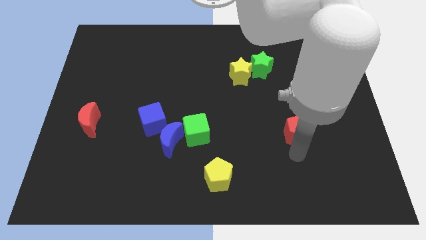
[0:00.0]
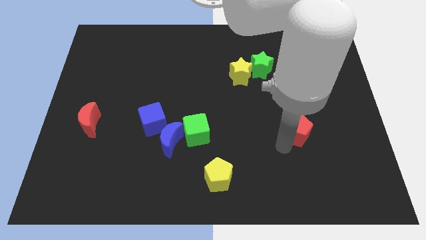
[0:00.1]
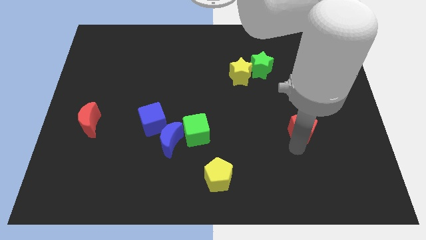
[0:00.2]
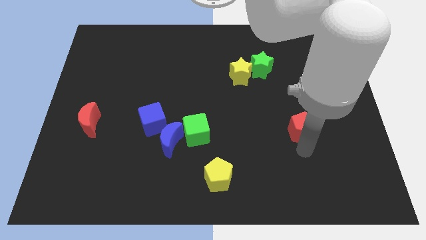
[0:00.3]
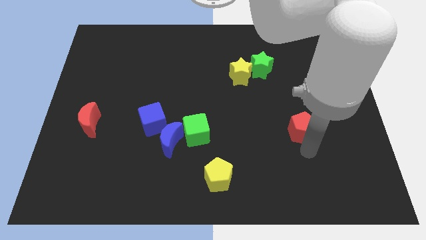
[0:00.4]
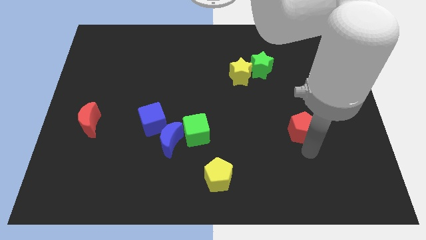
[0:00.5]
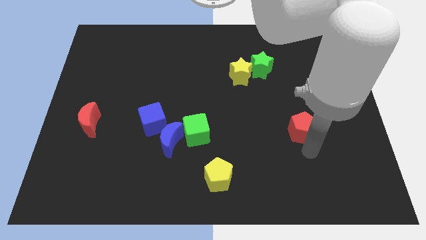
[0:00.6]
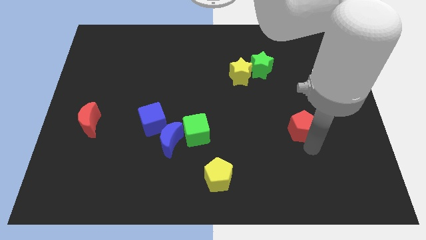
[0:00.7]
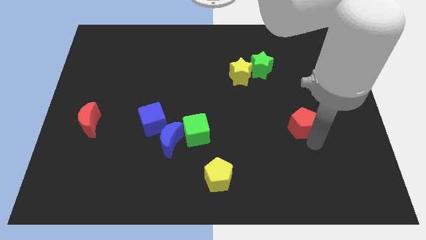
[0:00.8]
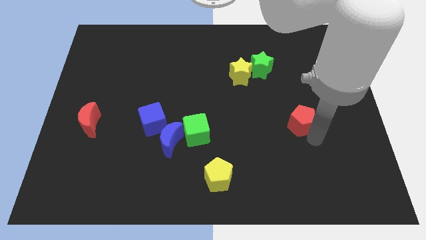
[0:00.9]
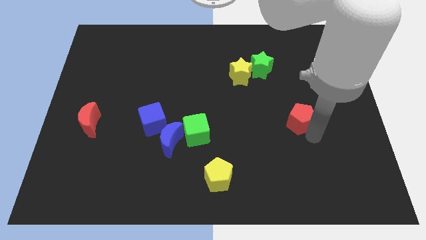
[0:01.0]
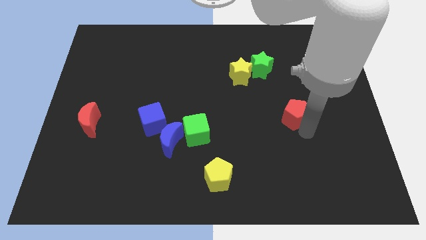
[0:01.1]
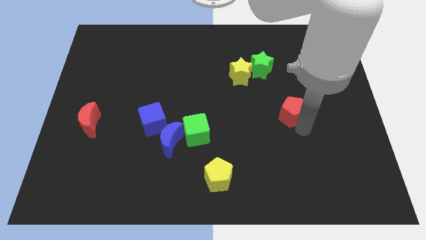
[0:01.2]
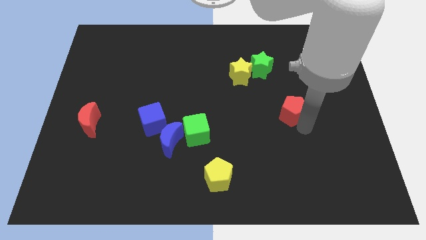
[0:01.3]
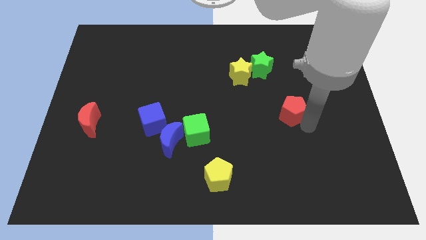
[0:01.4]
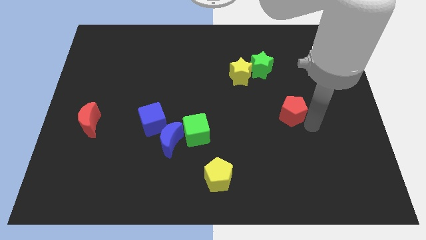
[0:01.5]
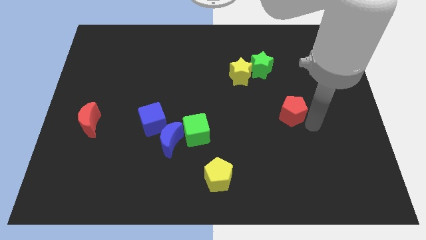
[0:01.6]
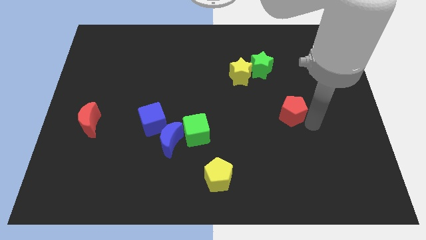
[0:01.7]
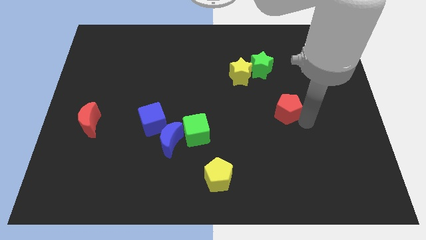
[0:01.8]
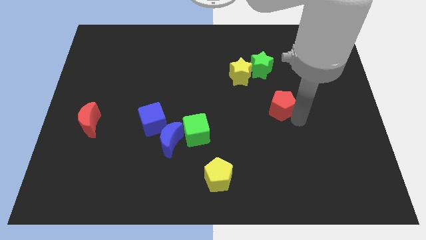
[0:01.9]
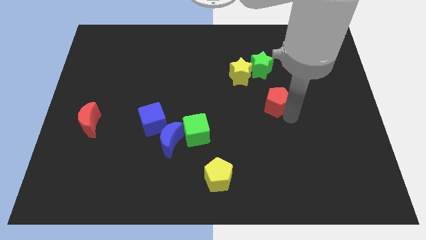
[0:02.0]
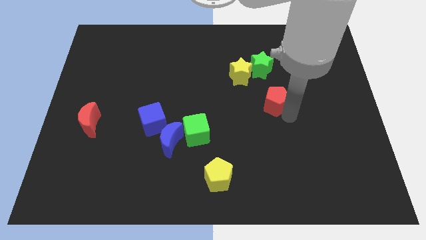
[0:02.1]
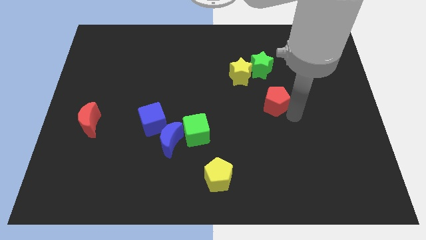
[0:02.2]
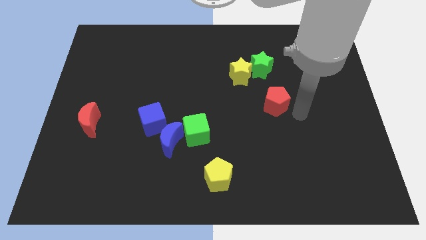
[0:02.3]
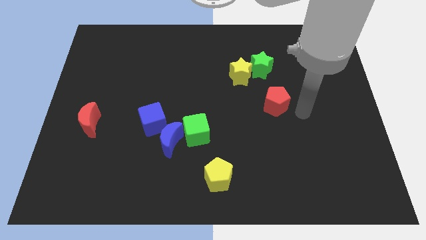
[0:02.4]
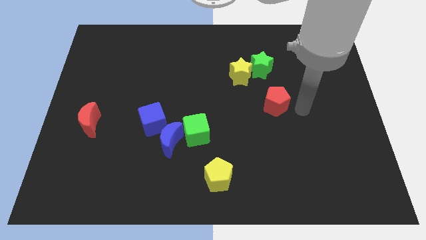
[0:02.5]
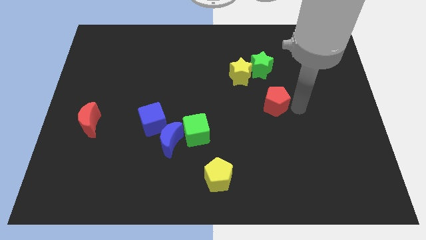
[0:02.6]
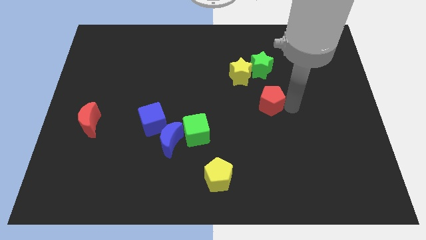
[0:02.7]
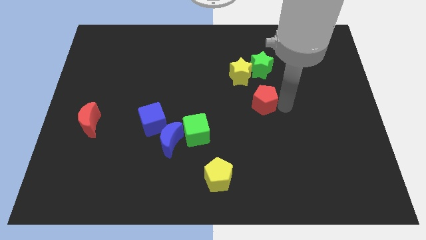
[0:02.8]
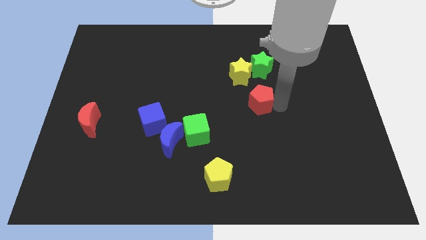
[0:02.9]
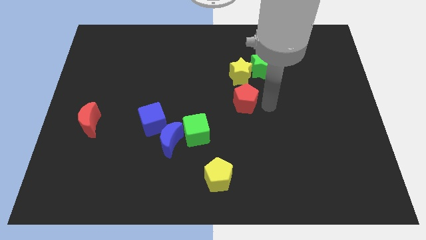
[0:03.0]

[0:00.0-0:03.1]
place the red pentagon at the bottom of yellow star

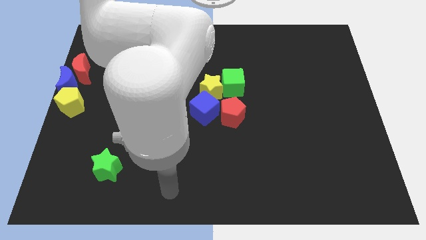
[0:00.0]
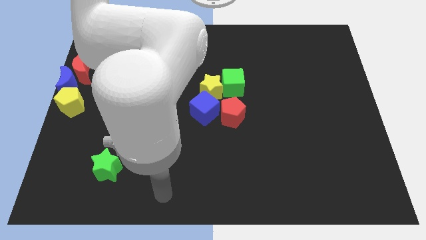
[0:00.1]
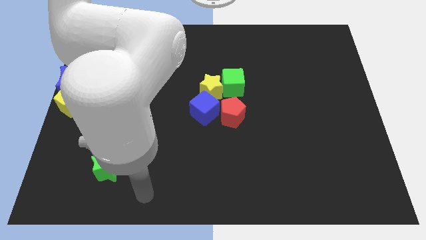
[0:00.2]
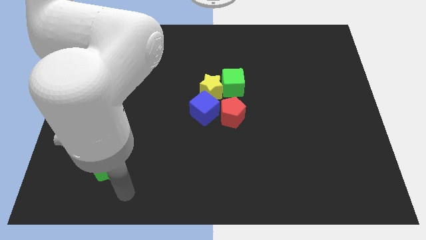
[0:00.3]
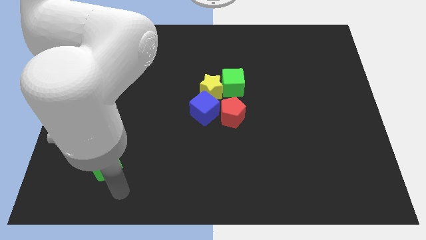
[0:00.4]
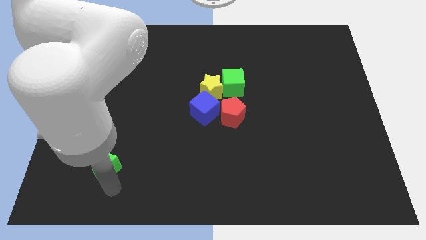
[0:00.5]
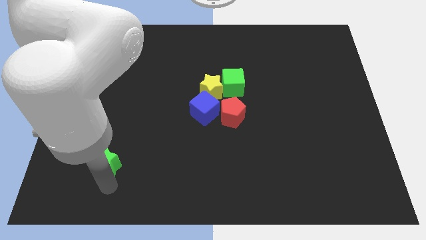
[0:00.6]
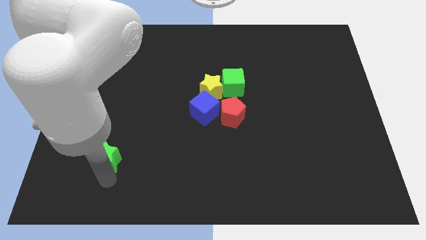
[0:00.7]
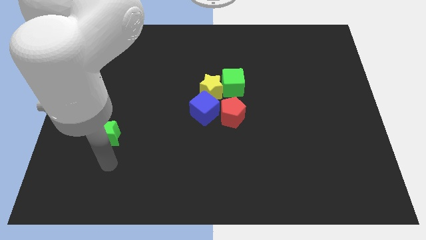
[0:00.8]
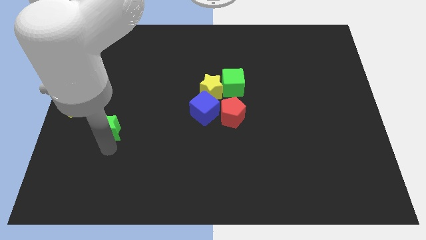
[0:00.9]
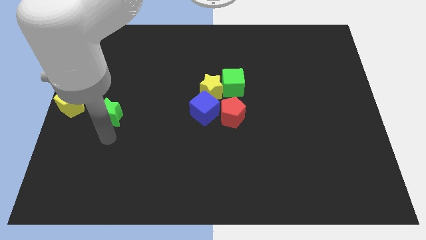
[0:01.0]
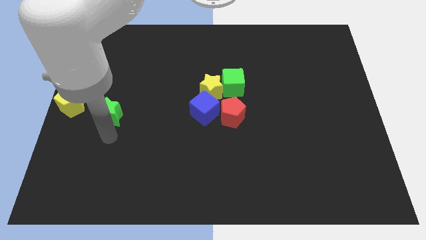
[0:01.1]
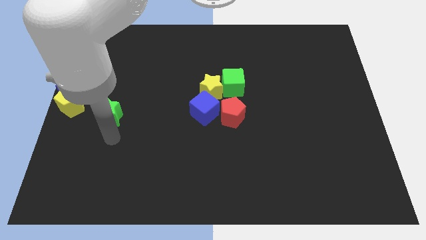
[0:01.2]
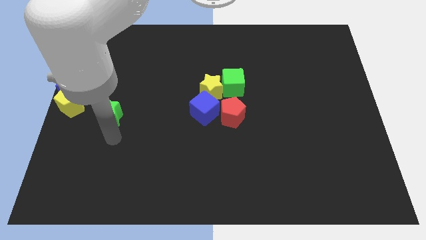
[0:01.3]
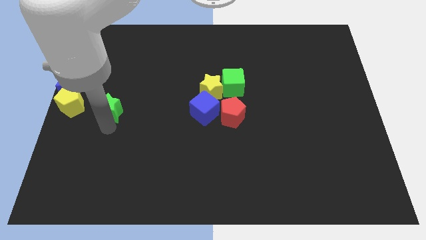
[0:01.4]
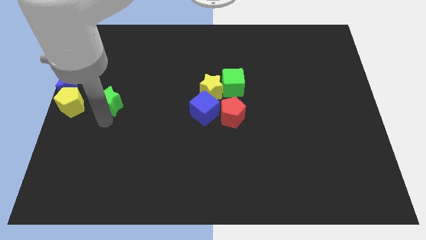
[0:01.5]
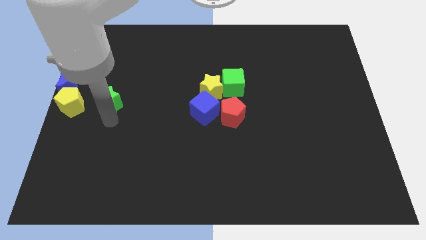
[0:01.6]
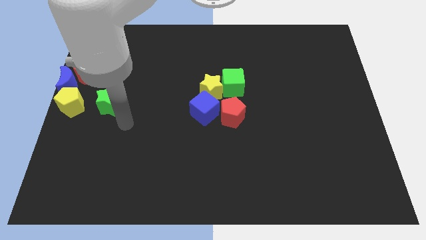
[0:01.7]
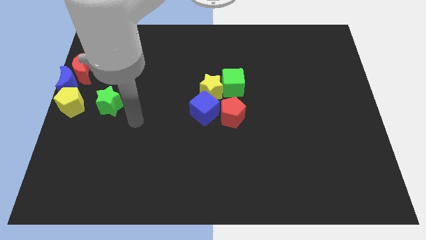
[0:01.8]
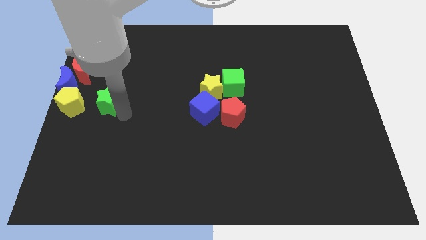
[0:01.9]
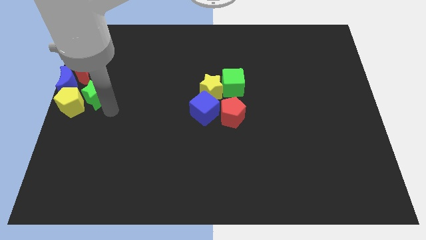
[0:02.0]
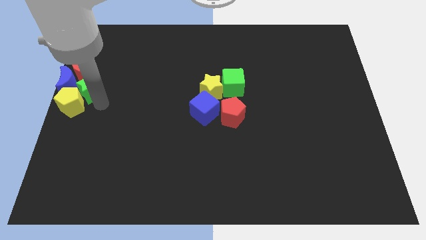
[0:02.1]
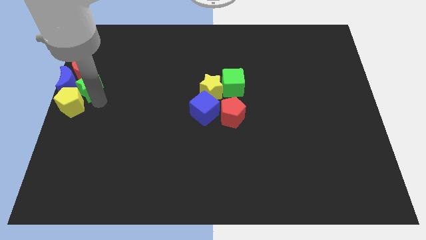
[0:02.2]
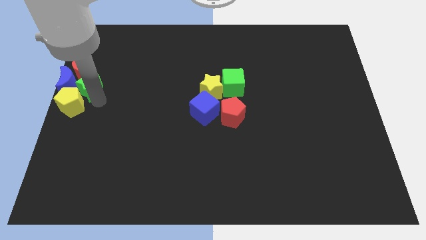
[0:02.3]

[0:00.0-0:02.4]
move the green star towards the blue crescent

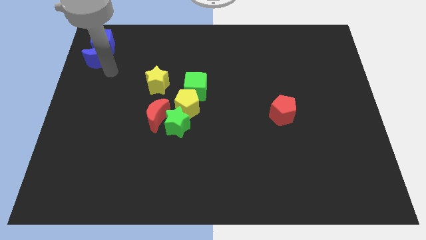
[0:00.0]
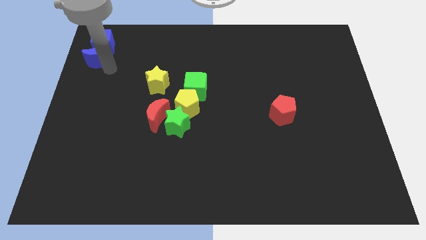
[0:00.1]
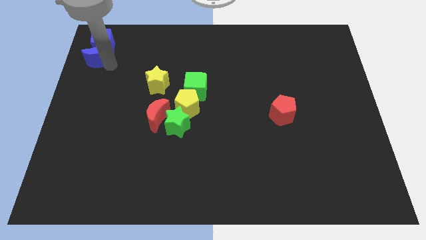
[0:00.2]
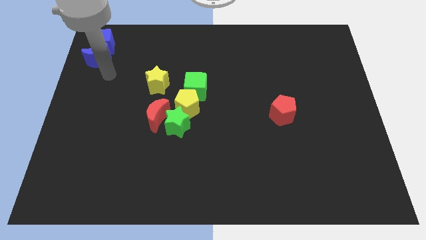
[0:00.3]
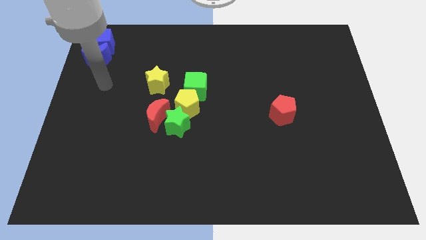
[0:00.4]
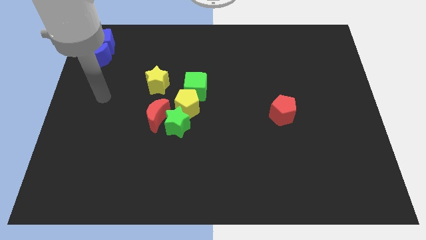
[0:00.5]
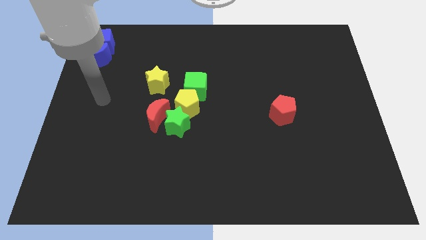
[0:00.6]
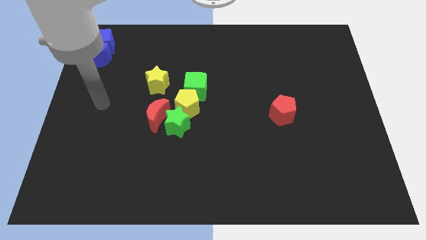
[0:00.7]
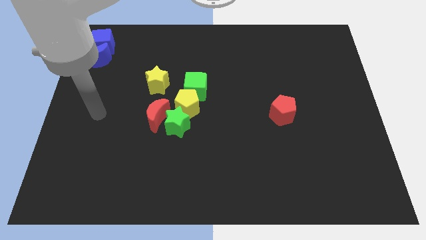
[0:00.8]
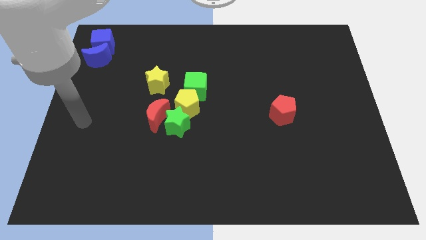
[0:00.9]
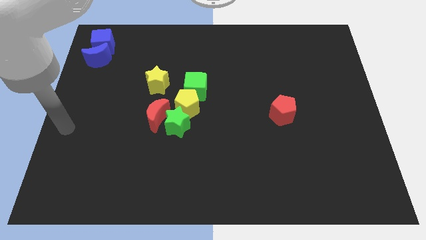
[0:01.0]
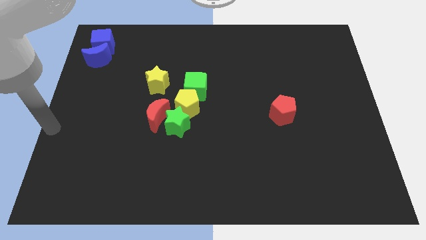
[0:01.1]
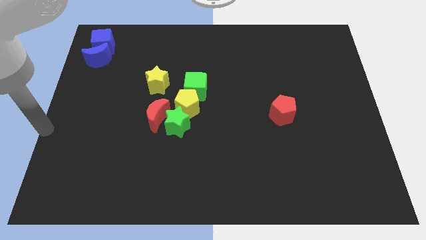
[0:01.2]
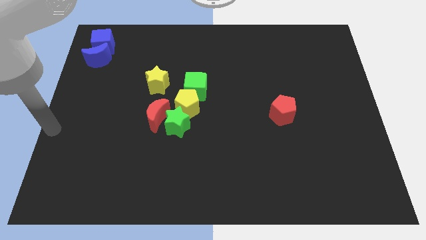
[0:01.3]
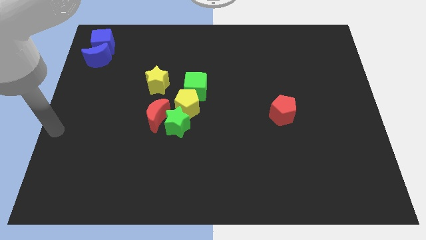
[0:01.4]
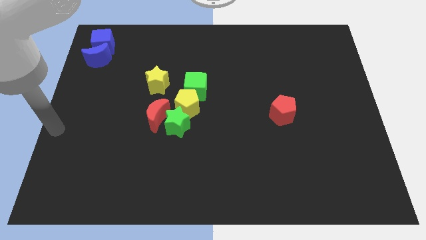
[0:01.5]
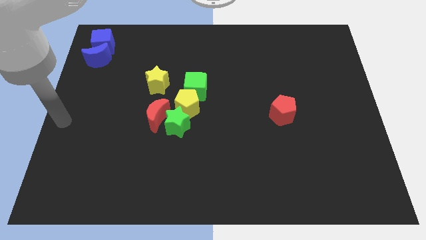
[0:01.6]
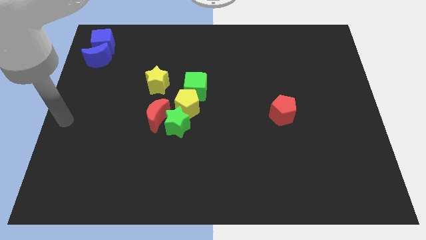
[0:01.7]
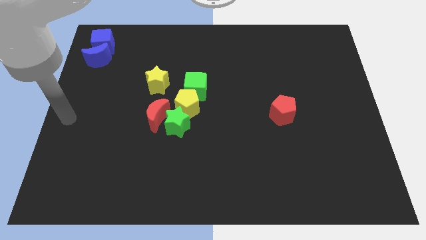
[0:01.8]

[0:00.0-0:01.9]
move your arm away from the blue moon

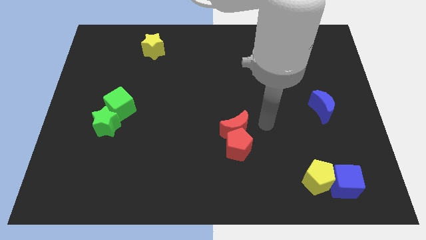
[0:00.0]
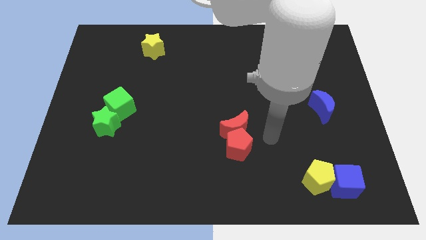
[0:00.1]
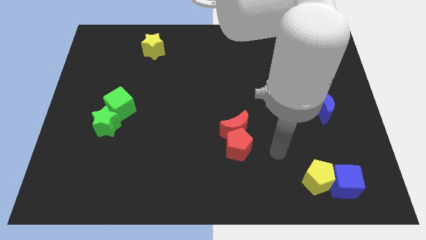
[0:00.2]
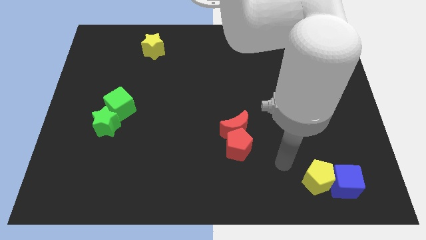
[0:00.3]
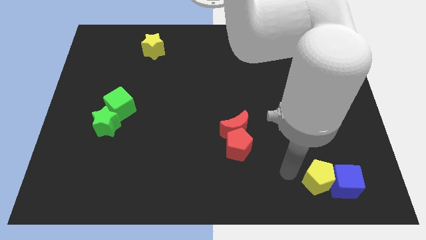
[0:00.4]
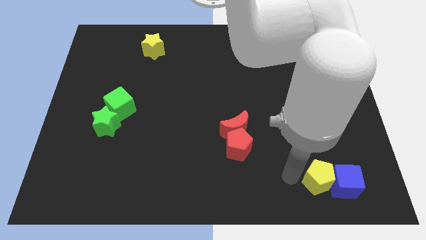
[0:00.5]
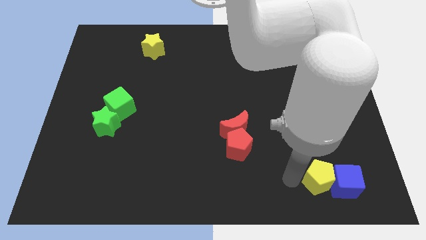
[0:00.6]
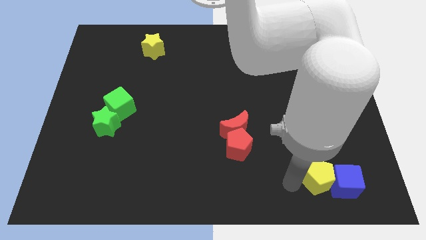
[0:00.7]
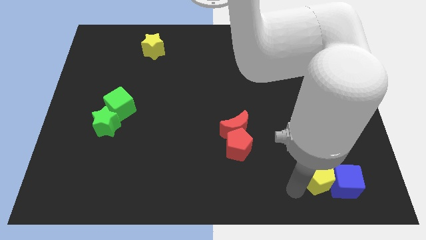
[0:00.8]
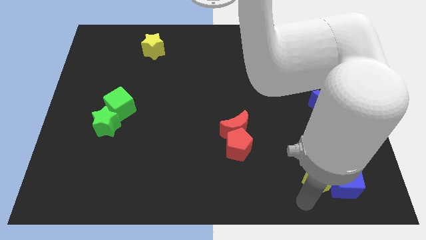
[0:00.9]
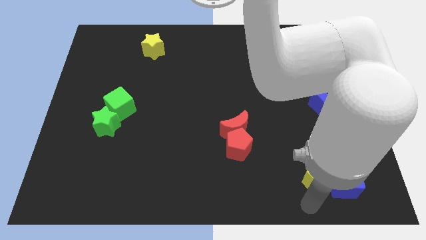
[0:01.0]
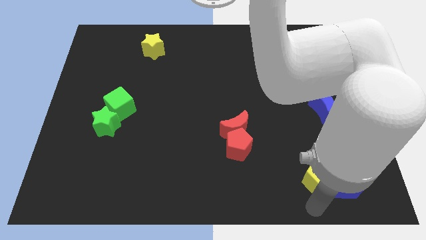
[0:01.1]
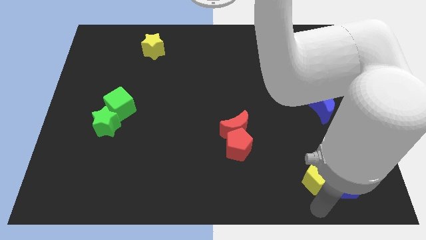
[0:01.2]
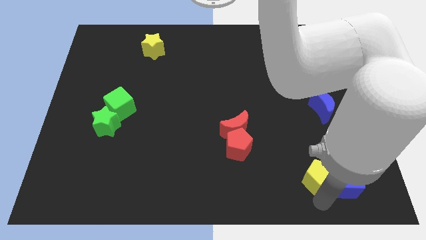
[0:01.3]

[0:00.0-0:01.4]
place your arm at the bottom side of the yellow pentagon

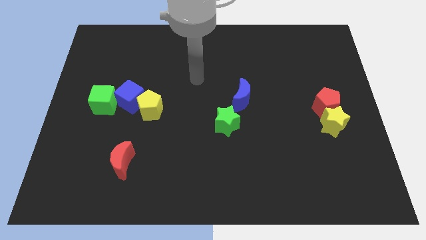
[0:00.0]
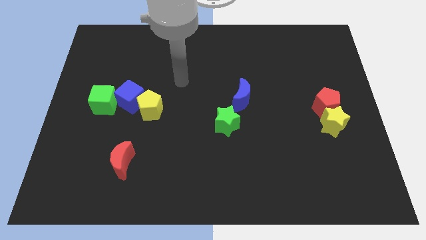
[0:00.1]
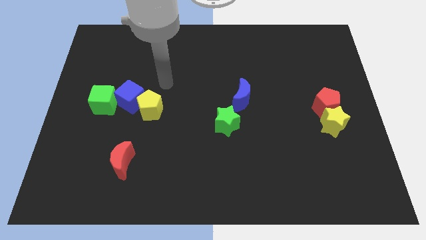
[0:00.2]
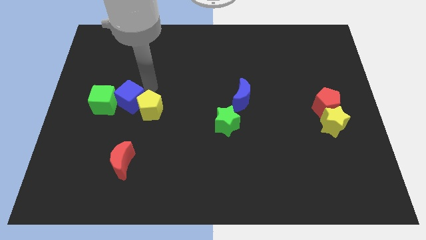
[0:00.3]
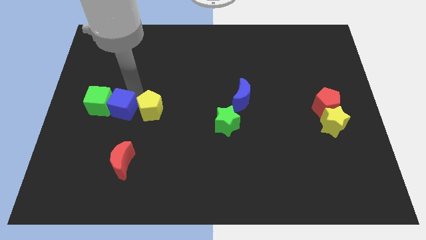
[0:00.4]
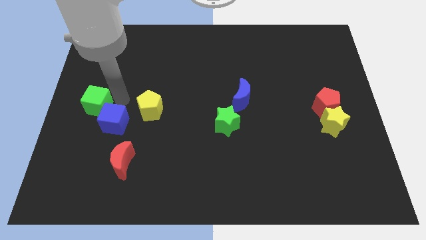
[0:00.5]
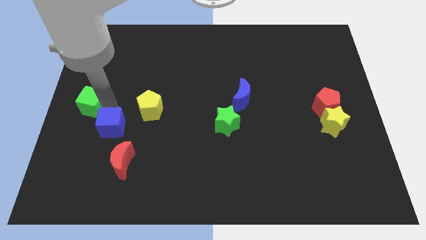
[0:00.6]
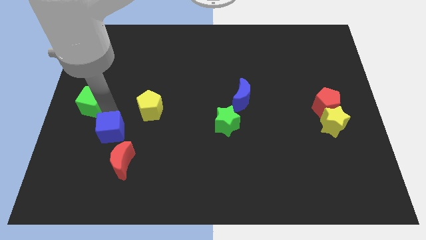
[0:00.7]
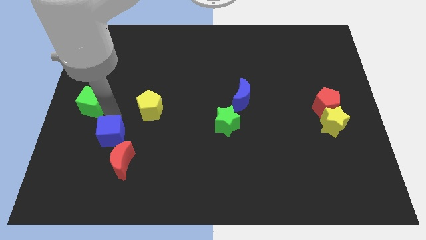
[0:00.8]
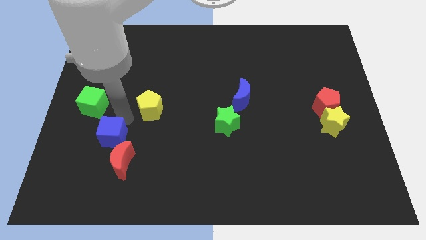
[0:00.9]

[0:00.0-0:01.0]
place the blue cube diagonal to the top left of the red moon
